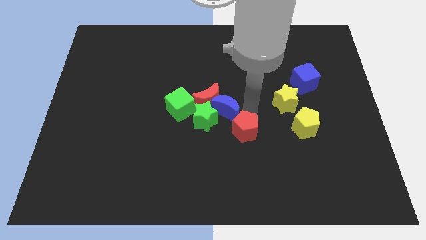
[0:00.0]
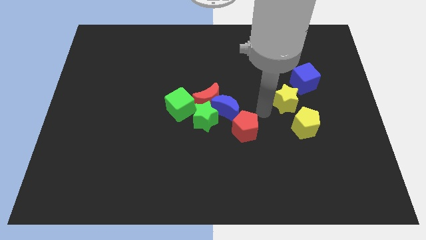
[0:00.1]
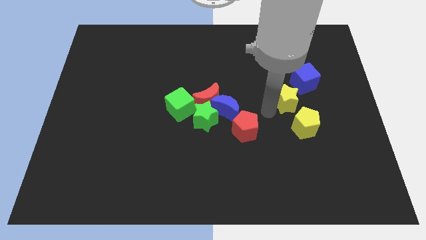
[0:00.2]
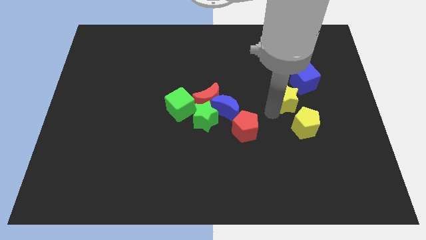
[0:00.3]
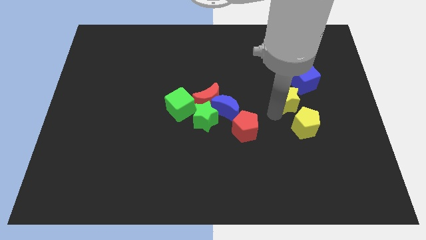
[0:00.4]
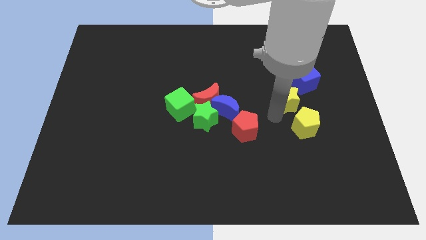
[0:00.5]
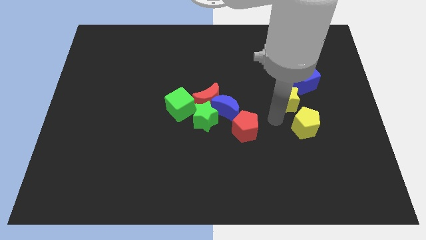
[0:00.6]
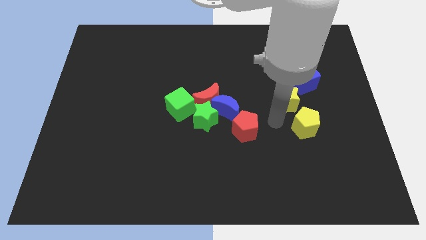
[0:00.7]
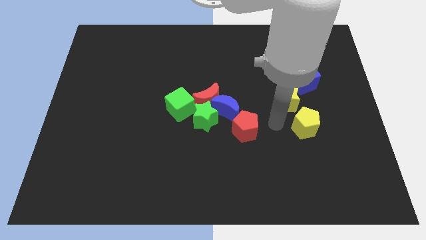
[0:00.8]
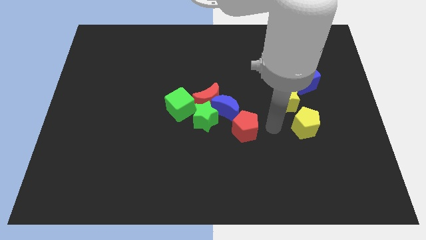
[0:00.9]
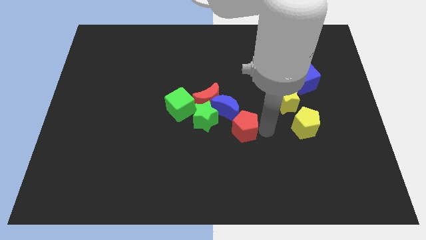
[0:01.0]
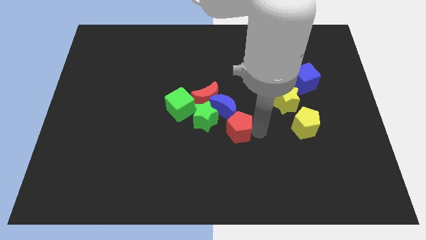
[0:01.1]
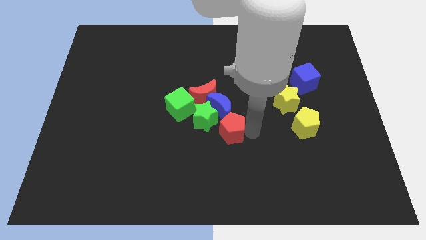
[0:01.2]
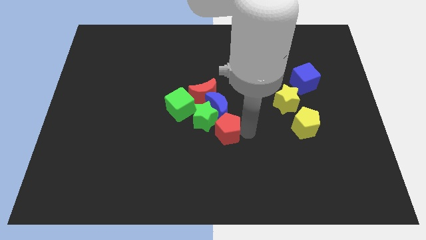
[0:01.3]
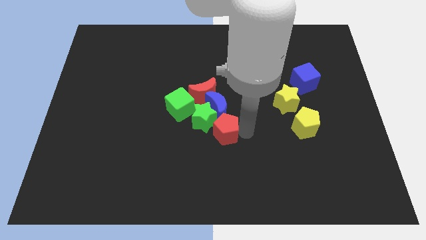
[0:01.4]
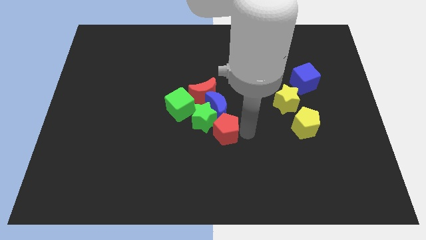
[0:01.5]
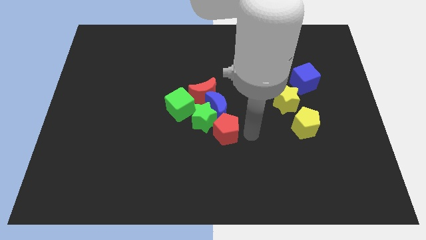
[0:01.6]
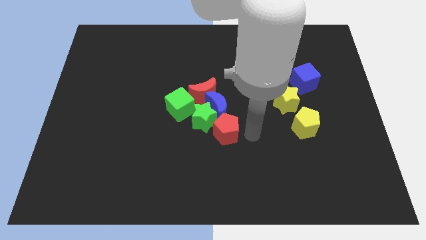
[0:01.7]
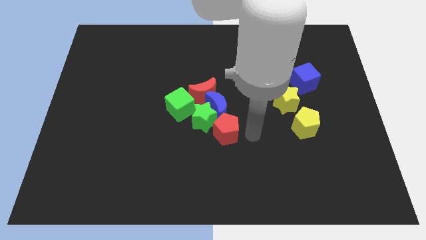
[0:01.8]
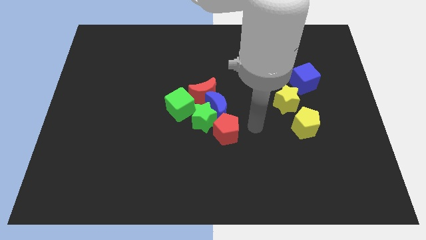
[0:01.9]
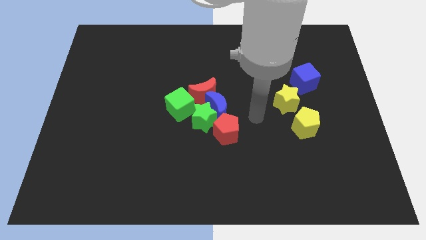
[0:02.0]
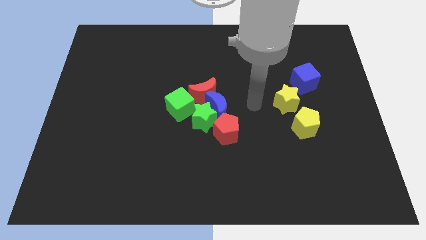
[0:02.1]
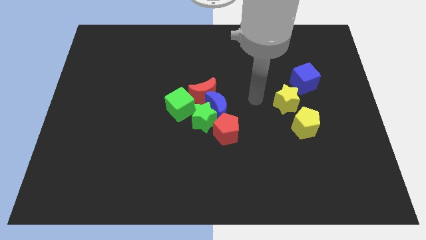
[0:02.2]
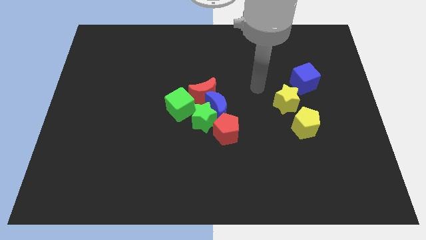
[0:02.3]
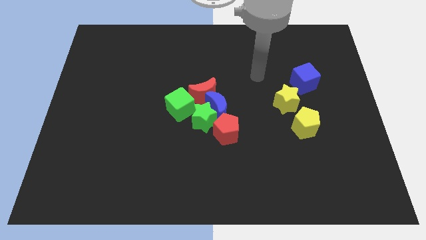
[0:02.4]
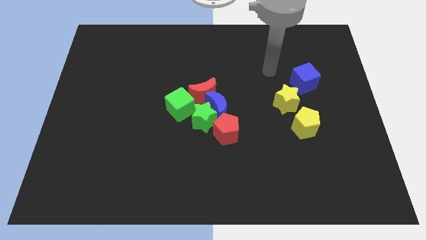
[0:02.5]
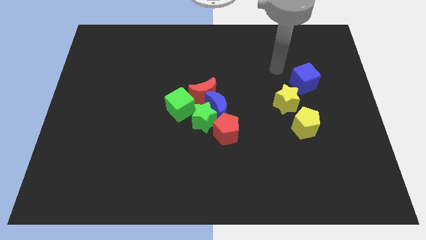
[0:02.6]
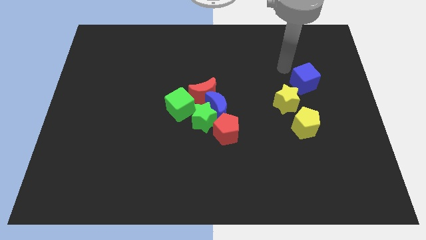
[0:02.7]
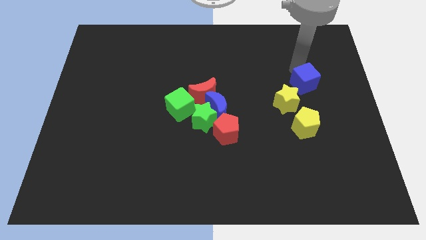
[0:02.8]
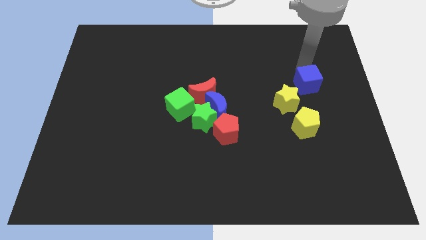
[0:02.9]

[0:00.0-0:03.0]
push the red pentagon slightly right to the green star

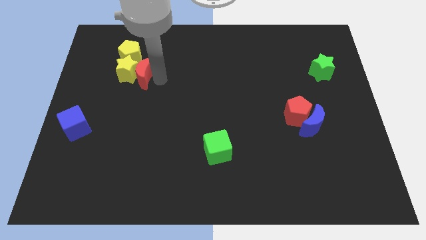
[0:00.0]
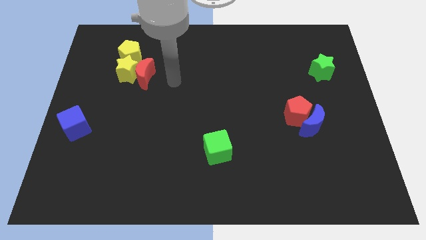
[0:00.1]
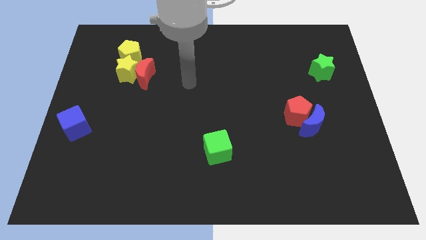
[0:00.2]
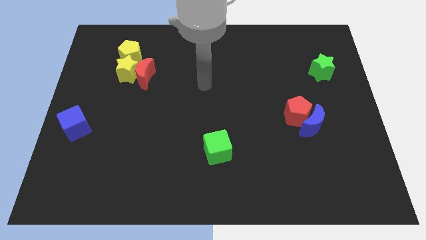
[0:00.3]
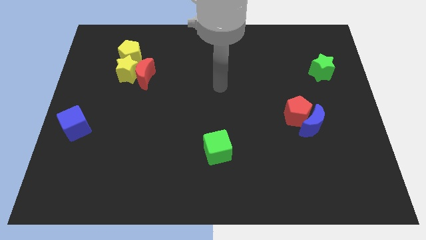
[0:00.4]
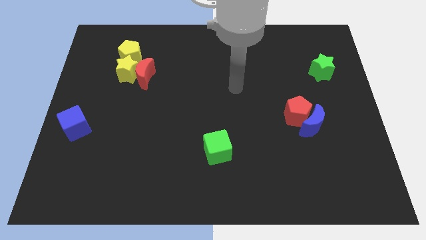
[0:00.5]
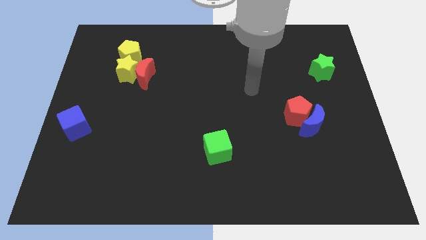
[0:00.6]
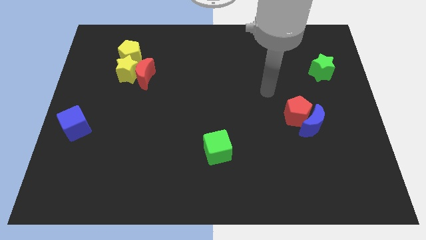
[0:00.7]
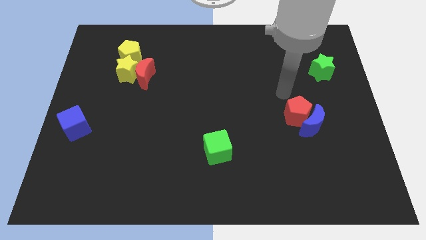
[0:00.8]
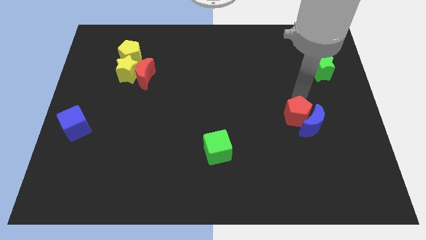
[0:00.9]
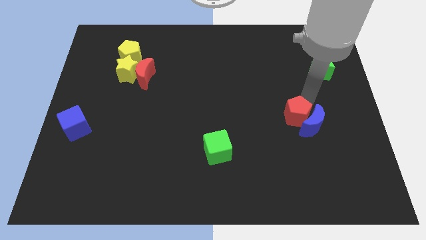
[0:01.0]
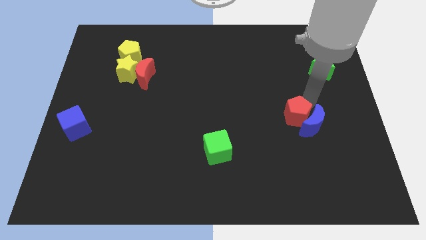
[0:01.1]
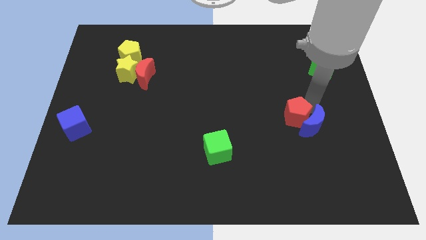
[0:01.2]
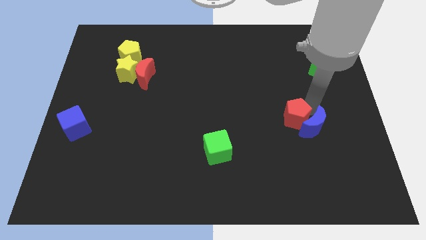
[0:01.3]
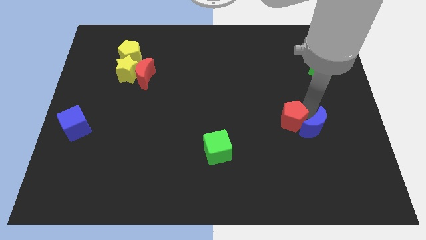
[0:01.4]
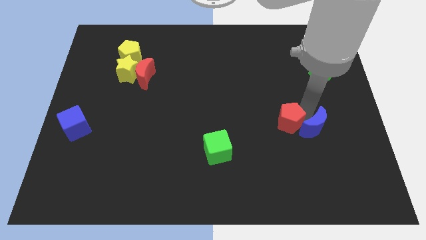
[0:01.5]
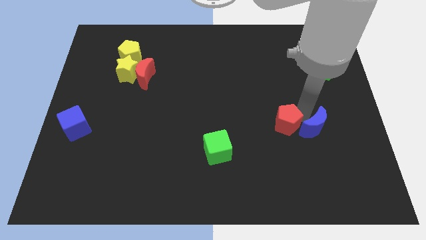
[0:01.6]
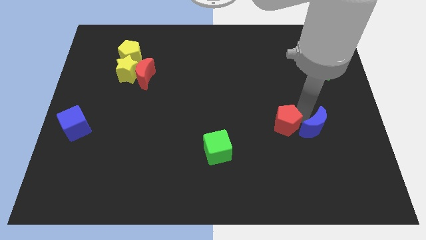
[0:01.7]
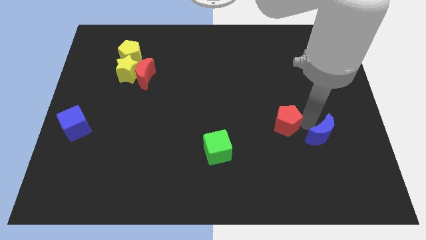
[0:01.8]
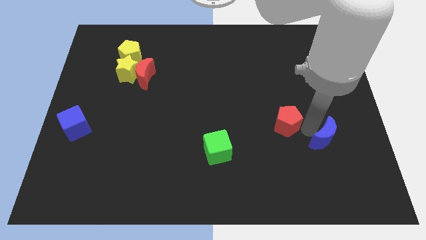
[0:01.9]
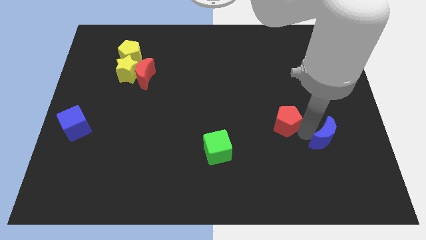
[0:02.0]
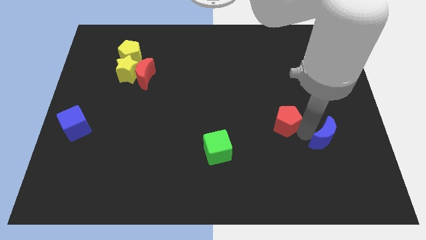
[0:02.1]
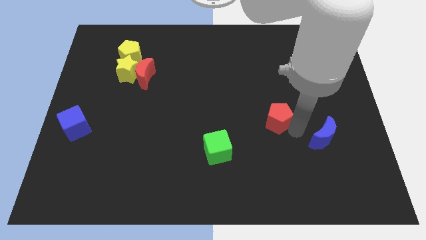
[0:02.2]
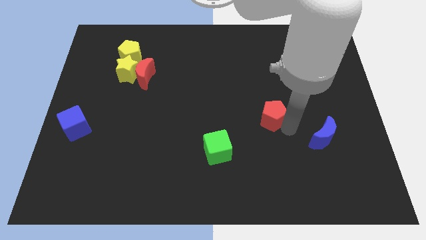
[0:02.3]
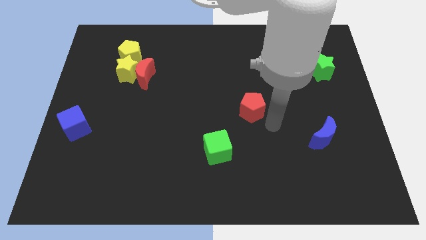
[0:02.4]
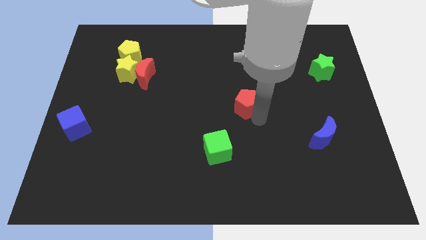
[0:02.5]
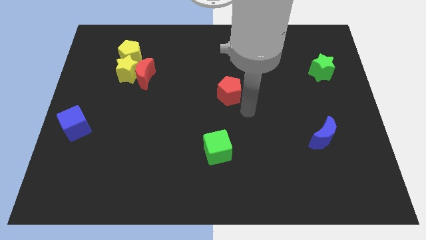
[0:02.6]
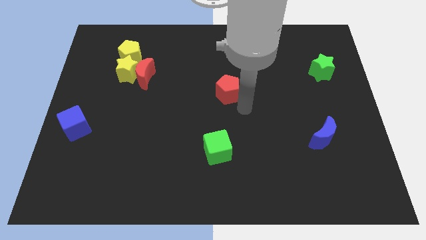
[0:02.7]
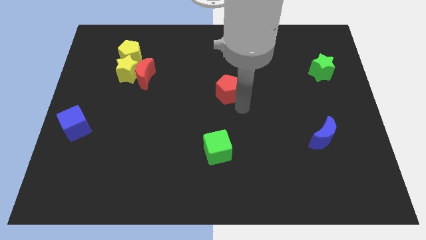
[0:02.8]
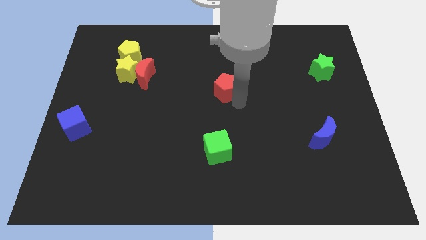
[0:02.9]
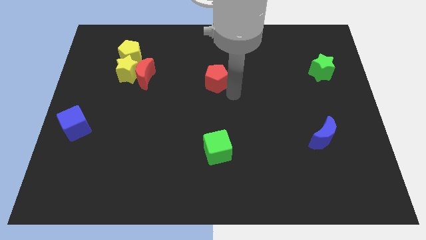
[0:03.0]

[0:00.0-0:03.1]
move the red pentagon to the top of the green cube

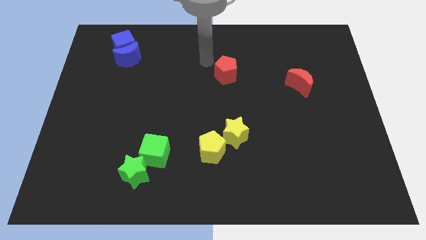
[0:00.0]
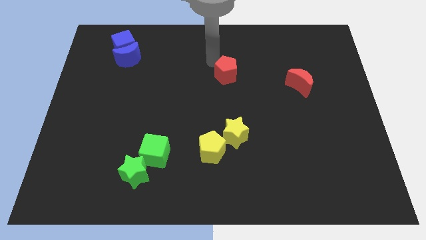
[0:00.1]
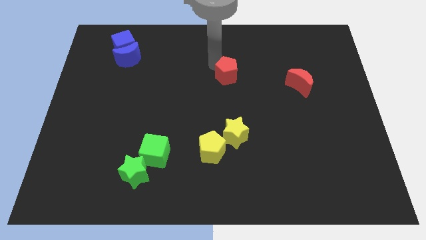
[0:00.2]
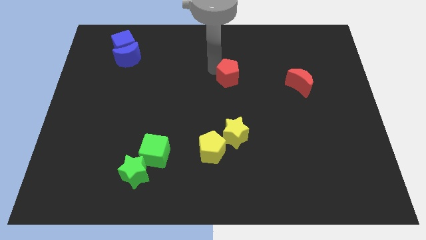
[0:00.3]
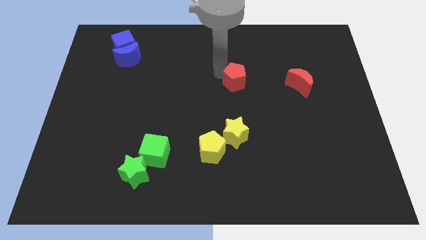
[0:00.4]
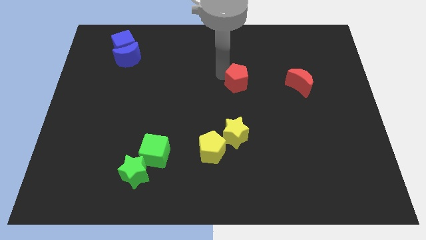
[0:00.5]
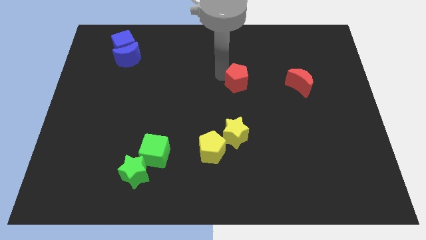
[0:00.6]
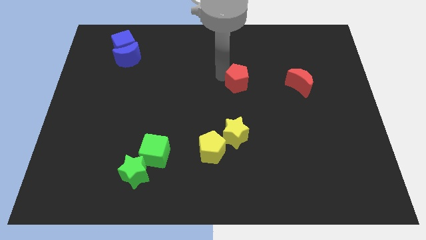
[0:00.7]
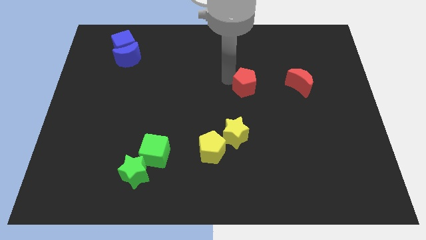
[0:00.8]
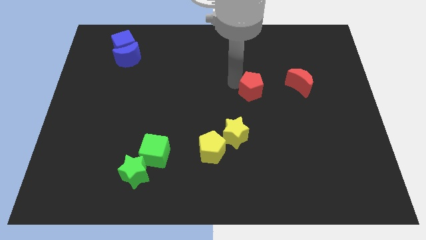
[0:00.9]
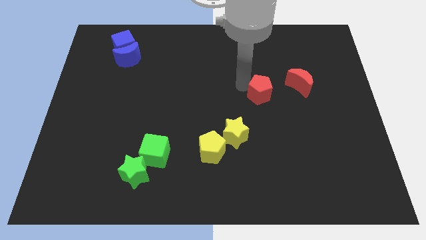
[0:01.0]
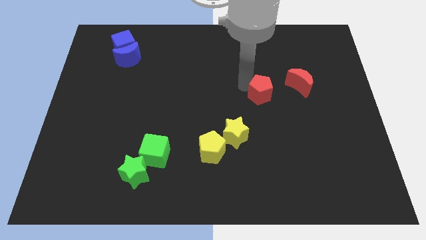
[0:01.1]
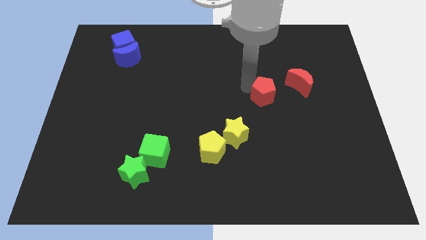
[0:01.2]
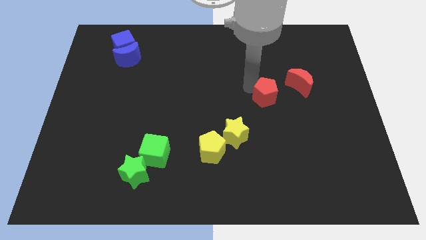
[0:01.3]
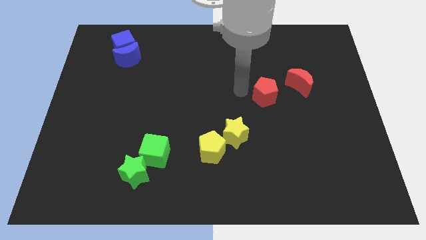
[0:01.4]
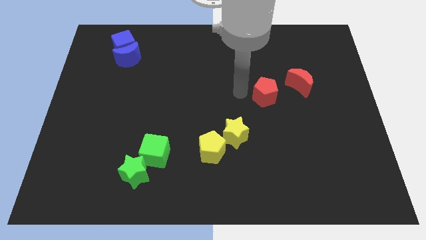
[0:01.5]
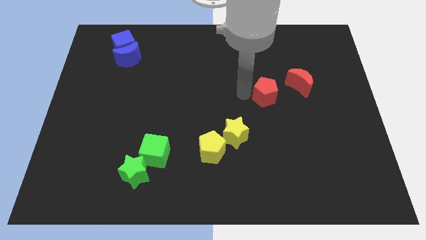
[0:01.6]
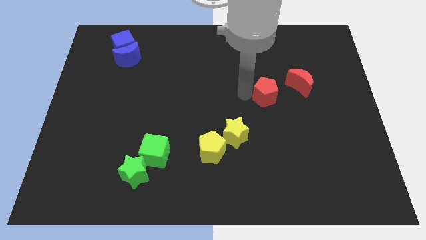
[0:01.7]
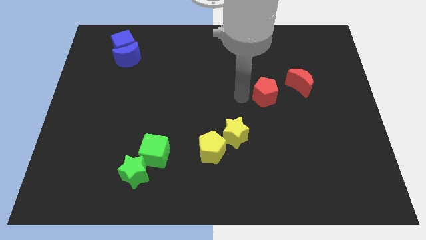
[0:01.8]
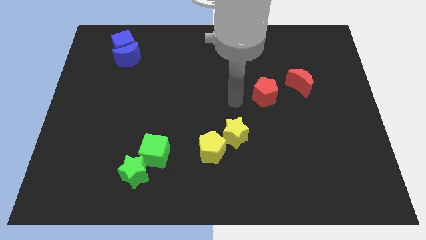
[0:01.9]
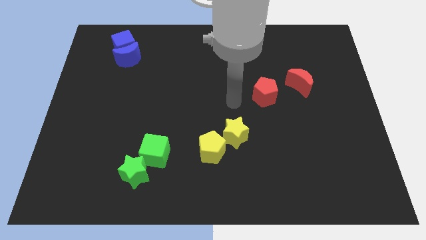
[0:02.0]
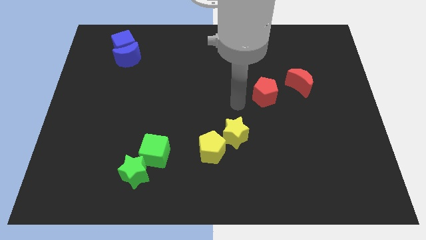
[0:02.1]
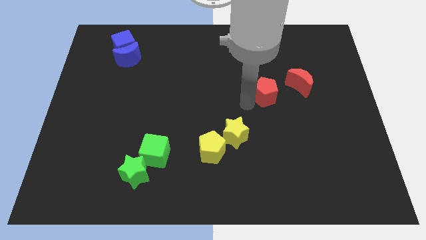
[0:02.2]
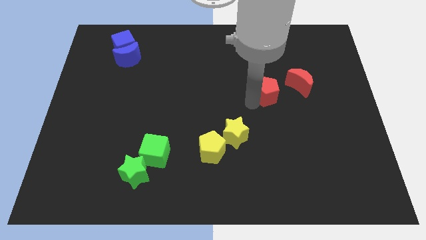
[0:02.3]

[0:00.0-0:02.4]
push the red pentagon towards the red crescent

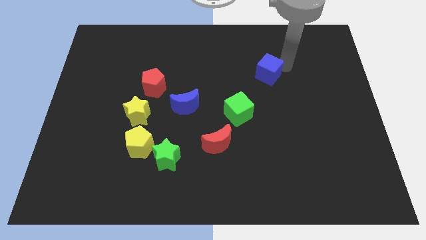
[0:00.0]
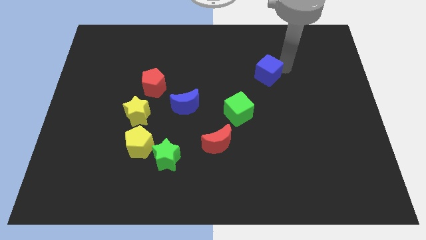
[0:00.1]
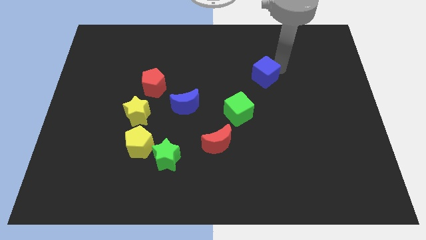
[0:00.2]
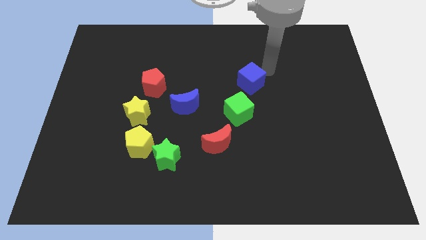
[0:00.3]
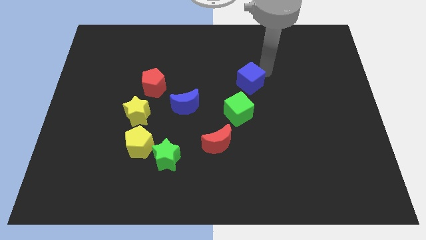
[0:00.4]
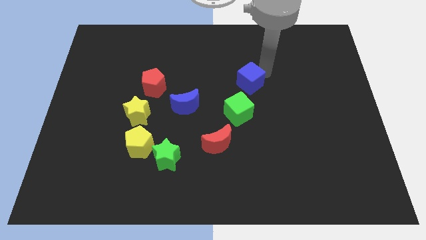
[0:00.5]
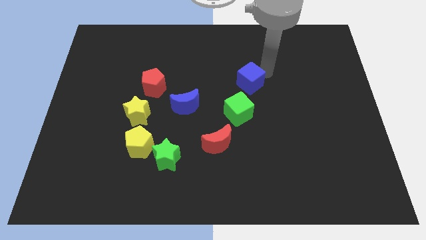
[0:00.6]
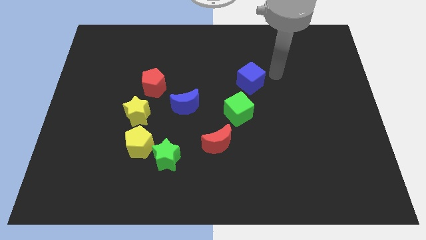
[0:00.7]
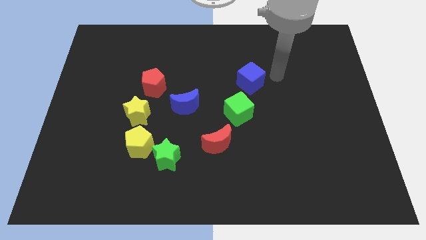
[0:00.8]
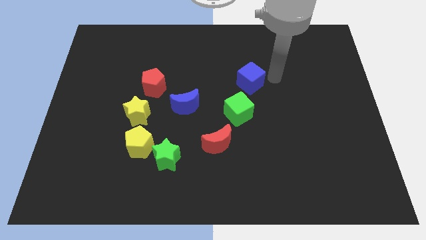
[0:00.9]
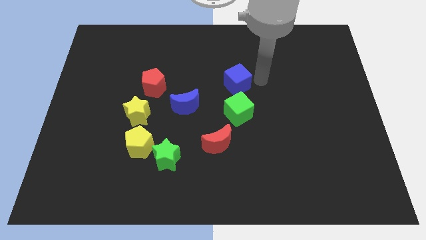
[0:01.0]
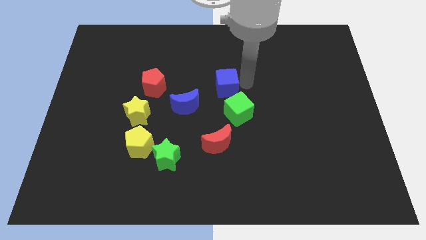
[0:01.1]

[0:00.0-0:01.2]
slide the blue cube vertically above the green cube
